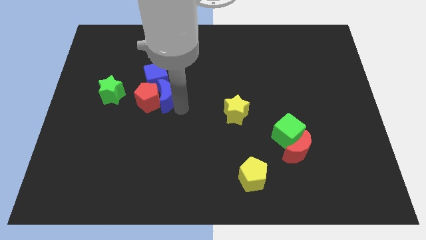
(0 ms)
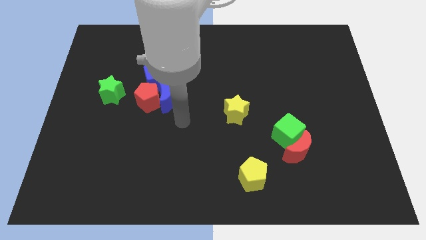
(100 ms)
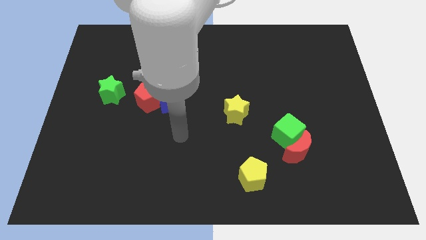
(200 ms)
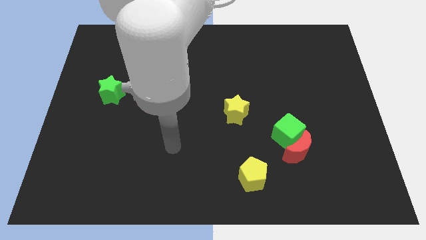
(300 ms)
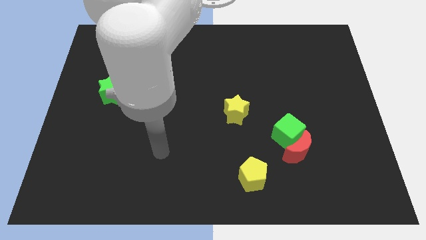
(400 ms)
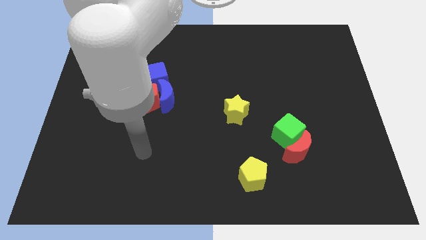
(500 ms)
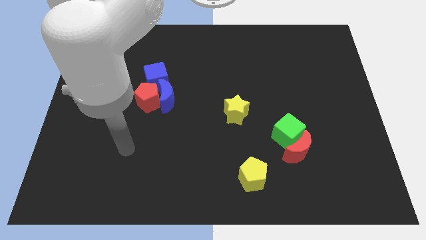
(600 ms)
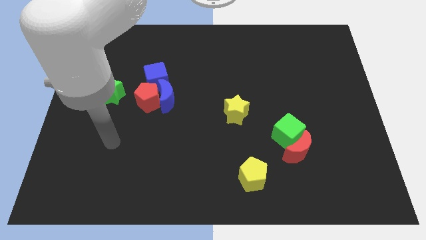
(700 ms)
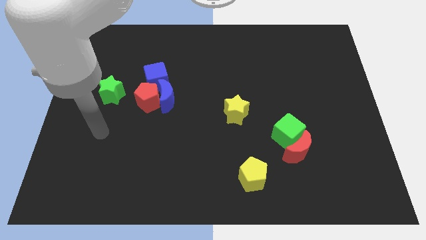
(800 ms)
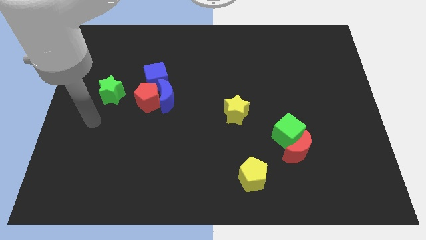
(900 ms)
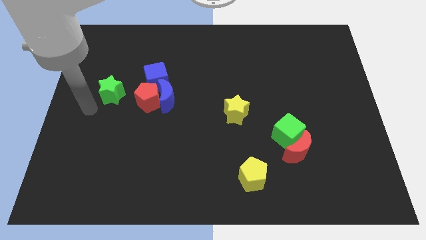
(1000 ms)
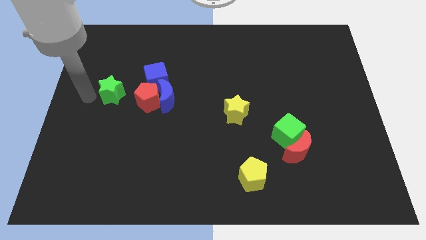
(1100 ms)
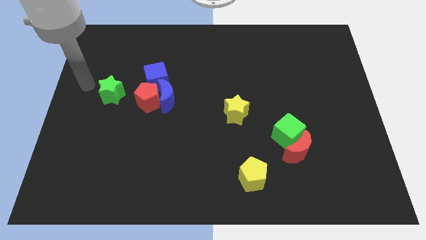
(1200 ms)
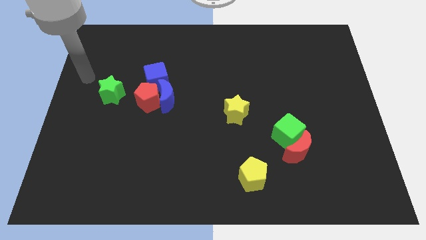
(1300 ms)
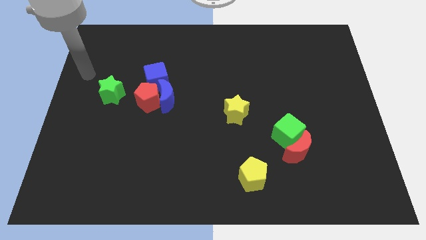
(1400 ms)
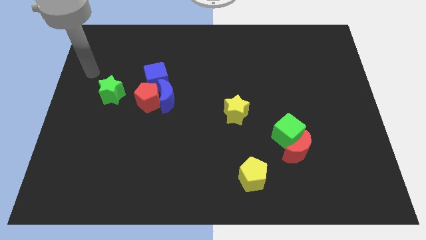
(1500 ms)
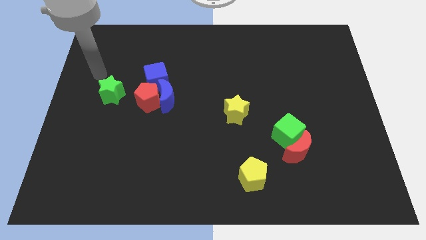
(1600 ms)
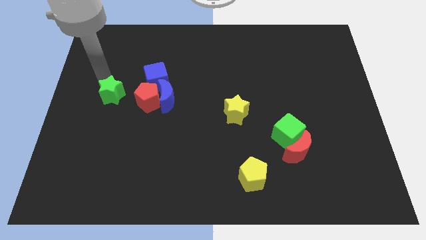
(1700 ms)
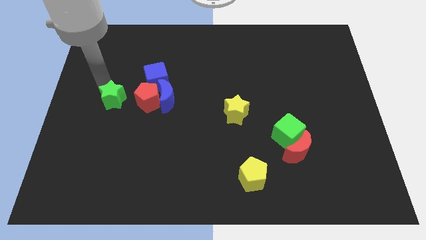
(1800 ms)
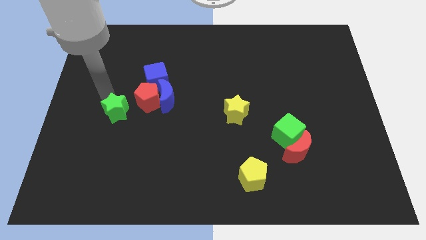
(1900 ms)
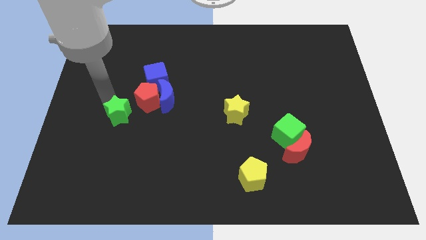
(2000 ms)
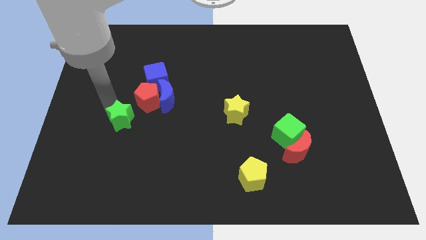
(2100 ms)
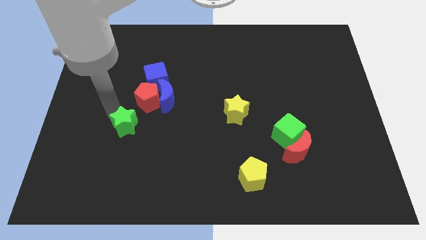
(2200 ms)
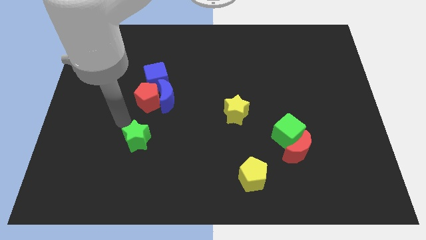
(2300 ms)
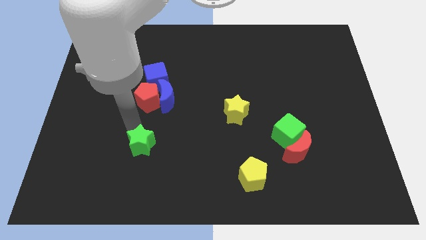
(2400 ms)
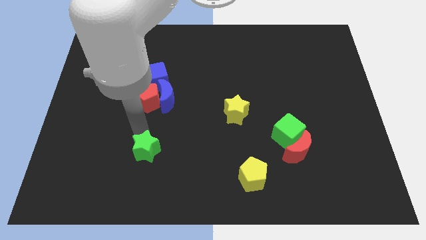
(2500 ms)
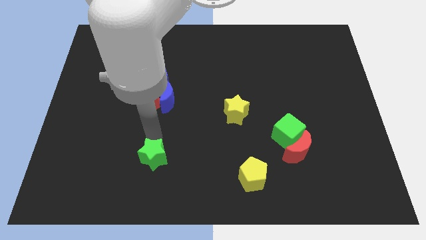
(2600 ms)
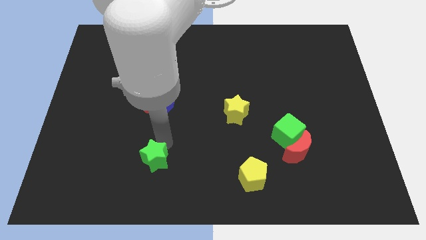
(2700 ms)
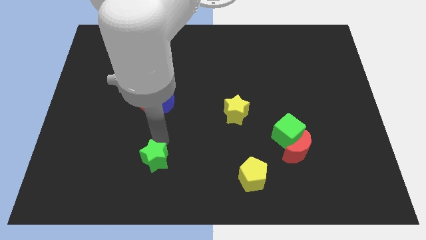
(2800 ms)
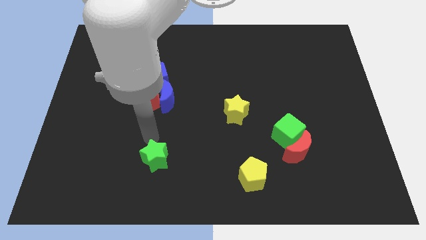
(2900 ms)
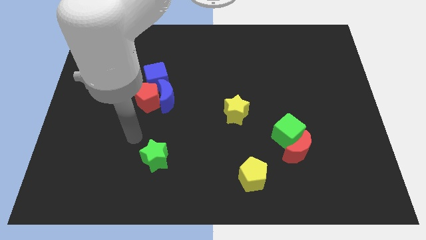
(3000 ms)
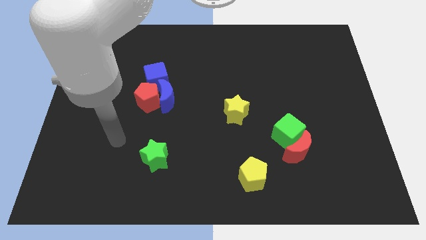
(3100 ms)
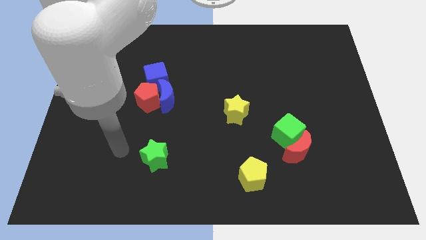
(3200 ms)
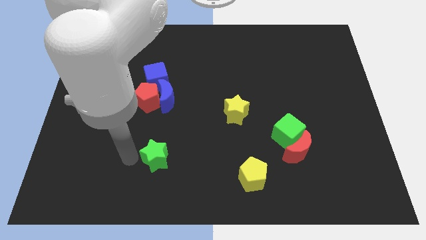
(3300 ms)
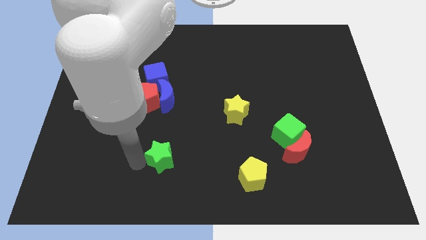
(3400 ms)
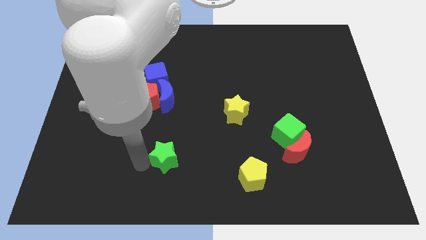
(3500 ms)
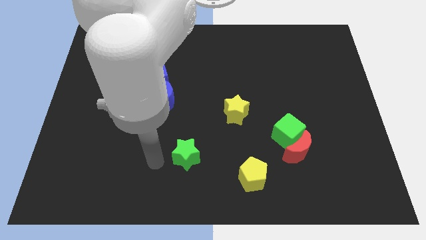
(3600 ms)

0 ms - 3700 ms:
drag green star towards bottom of the board

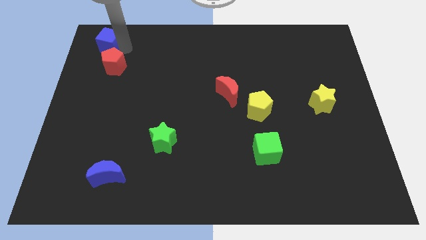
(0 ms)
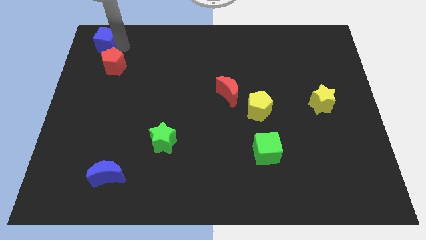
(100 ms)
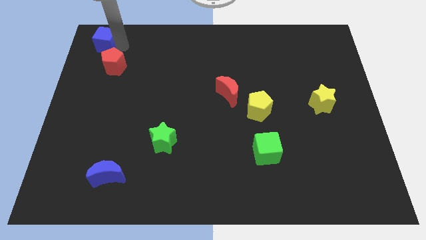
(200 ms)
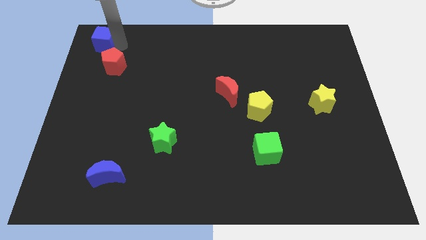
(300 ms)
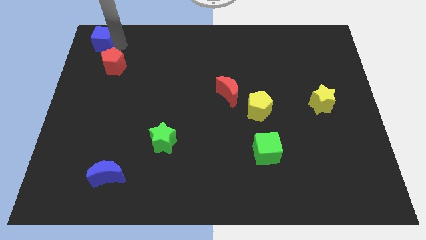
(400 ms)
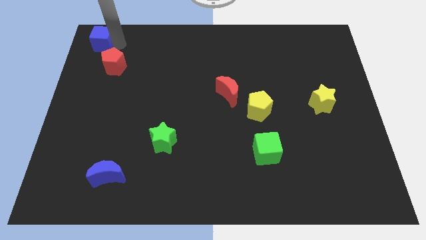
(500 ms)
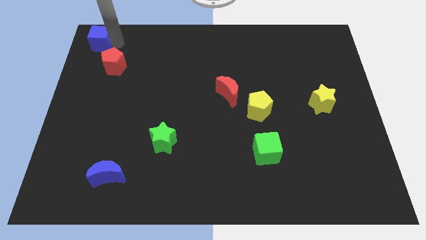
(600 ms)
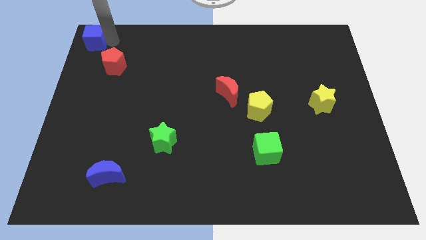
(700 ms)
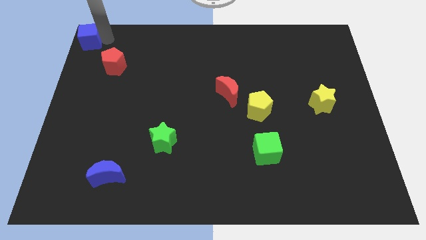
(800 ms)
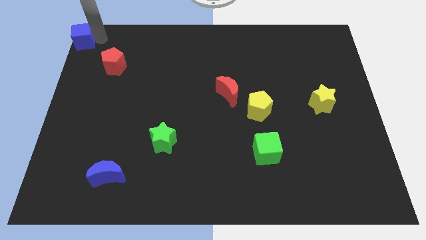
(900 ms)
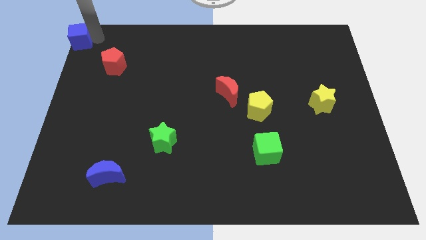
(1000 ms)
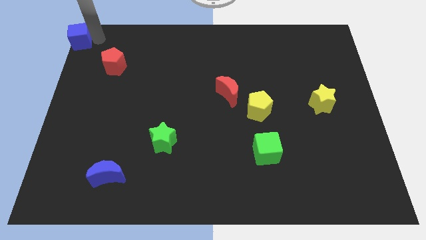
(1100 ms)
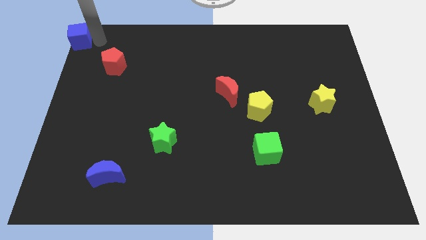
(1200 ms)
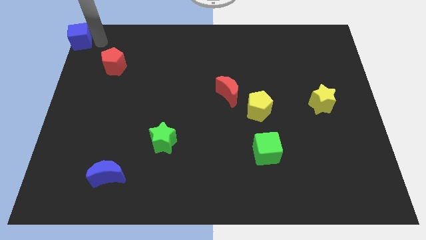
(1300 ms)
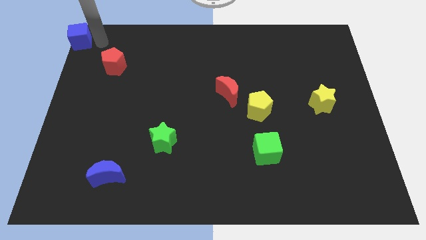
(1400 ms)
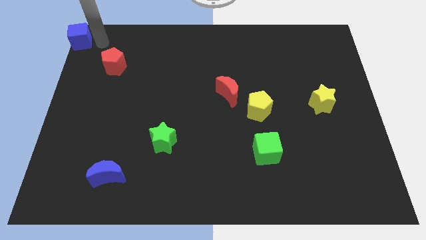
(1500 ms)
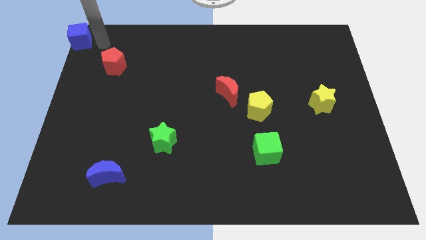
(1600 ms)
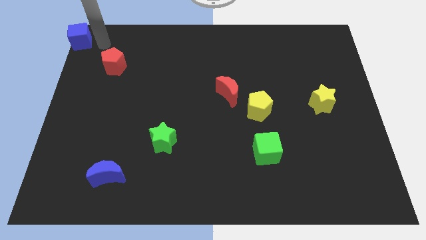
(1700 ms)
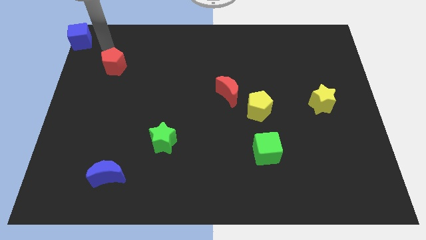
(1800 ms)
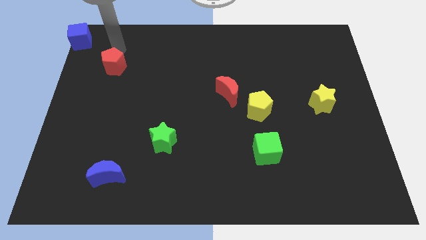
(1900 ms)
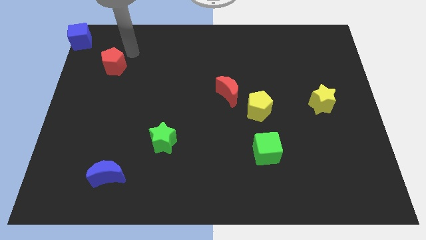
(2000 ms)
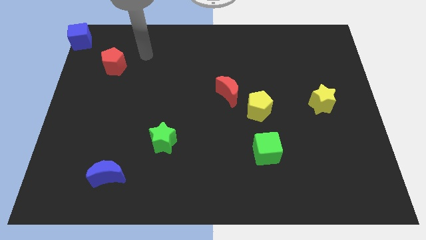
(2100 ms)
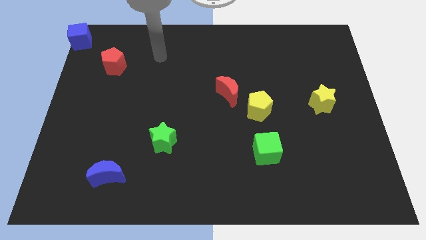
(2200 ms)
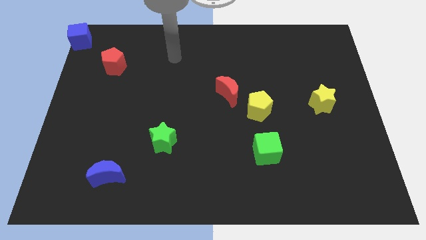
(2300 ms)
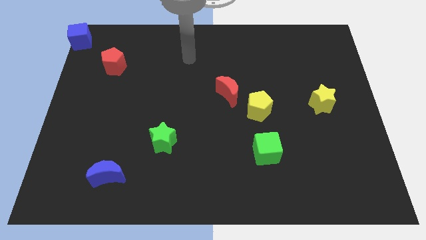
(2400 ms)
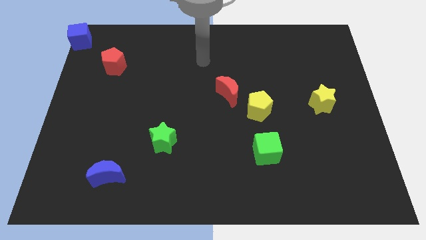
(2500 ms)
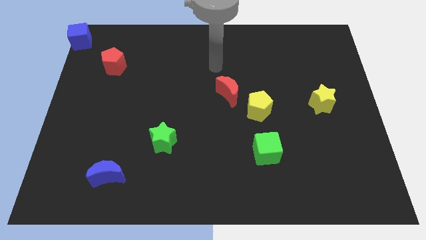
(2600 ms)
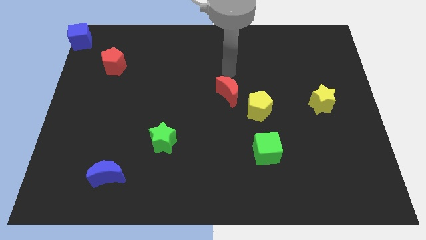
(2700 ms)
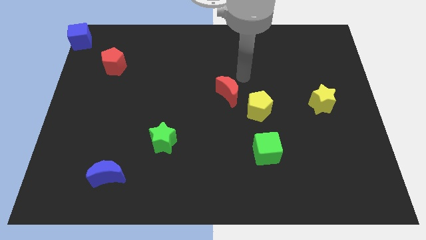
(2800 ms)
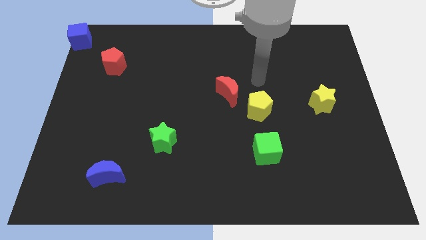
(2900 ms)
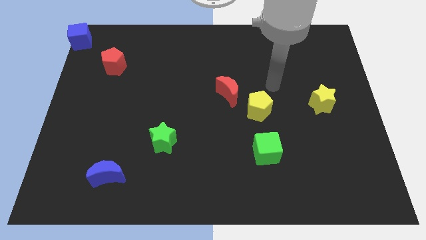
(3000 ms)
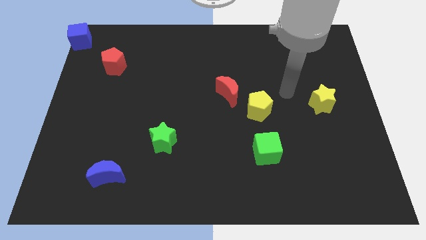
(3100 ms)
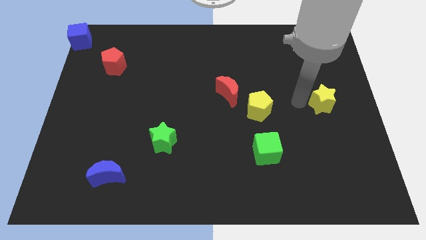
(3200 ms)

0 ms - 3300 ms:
move blue cube to the top left corner of the board

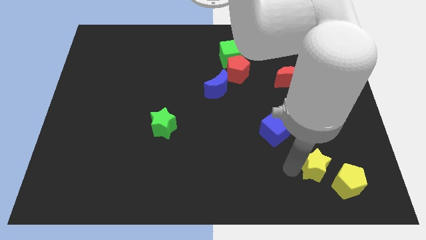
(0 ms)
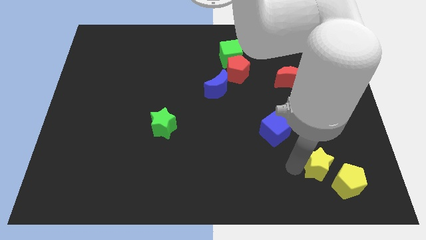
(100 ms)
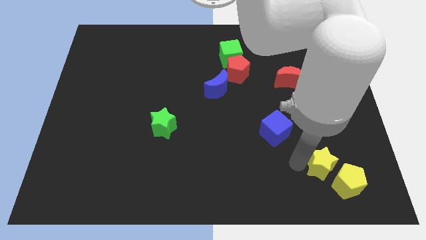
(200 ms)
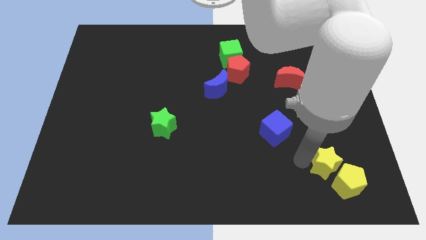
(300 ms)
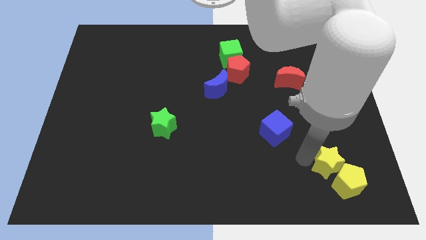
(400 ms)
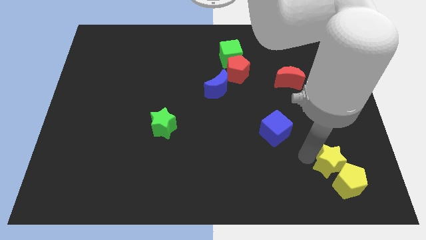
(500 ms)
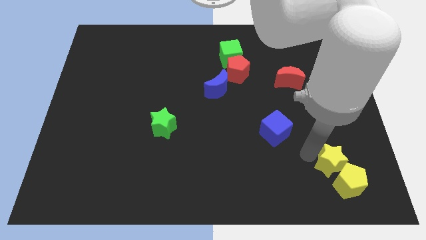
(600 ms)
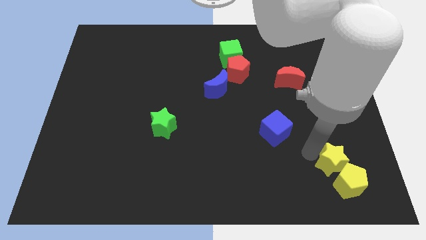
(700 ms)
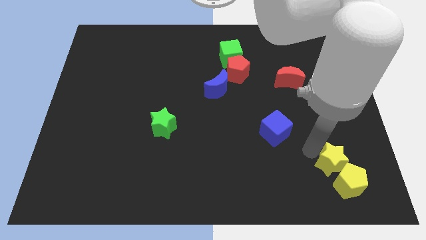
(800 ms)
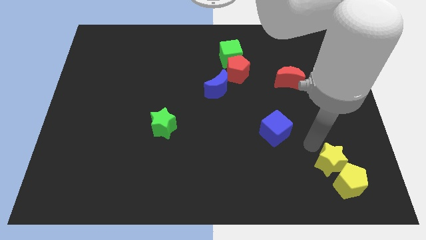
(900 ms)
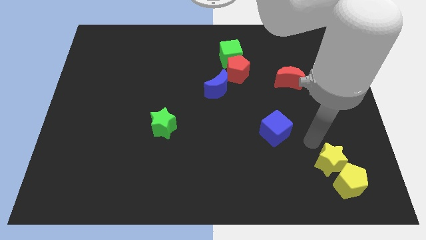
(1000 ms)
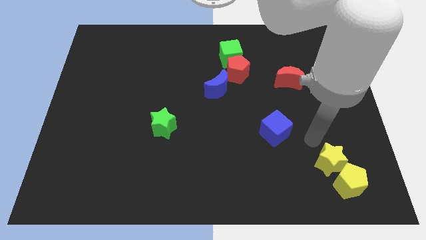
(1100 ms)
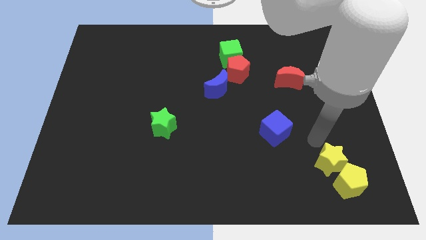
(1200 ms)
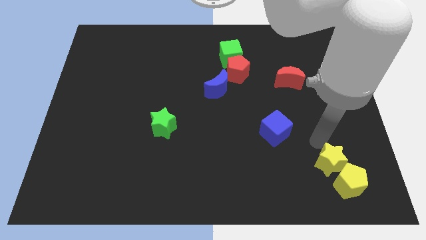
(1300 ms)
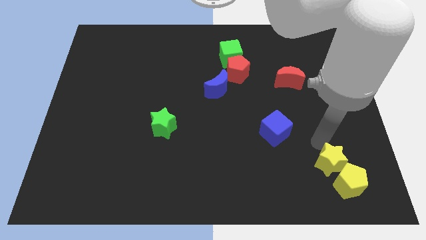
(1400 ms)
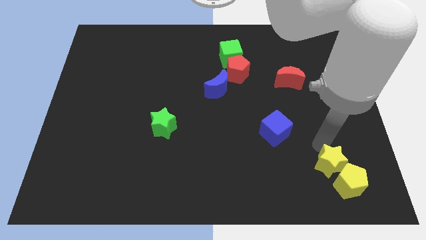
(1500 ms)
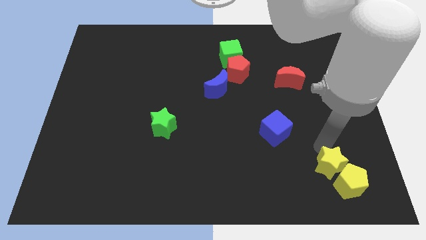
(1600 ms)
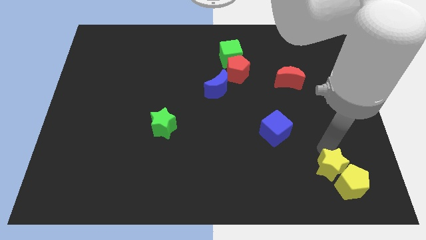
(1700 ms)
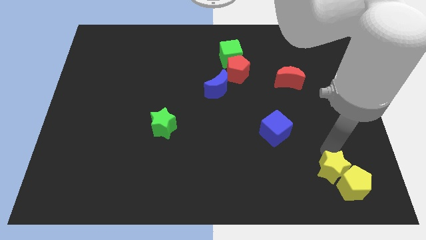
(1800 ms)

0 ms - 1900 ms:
push the yellow star into the yellow pentagon

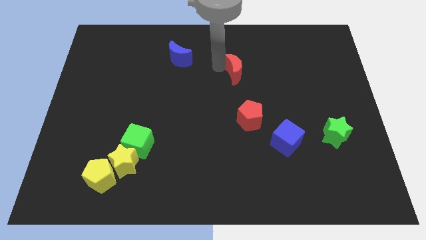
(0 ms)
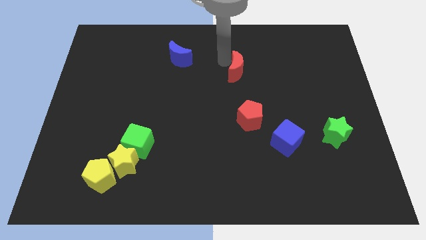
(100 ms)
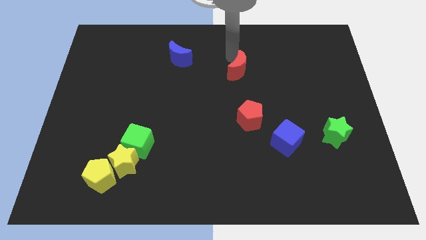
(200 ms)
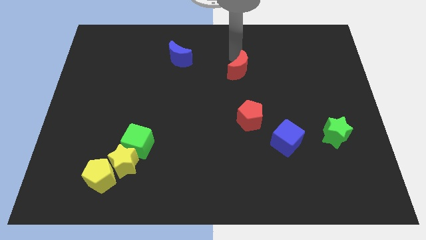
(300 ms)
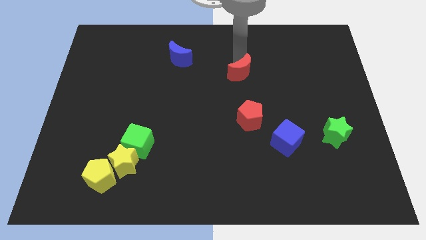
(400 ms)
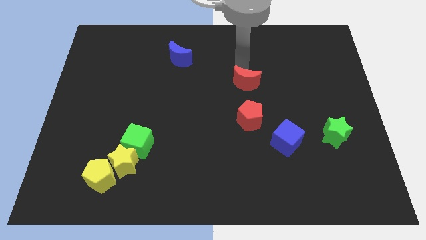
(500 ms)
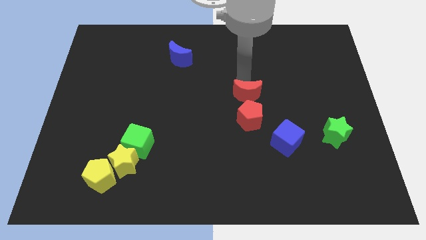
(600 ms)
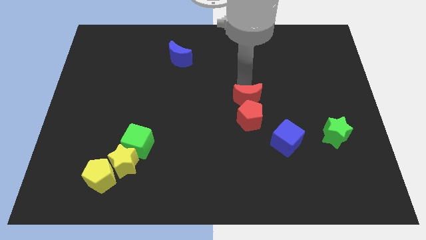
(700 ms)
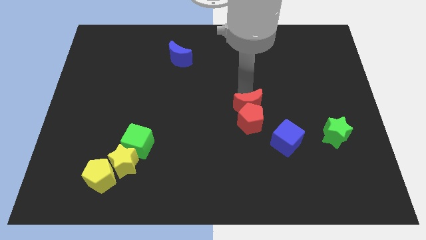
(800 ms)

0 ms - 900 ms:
put the red moon at the top of red pentagon
